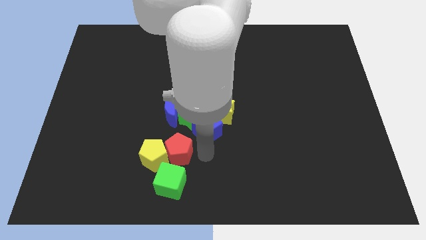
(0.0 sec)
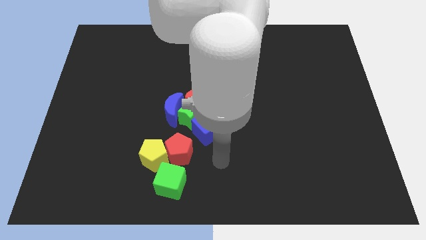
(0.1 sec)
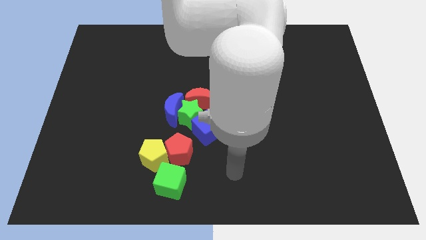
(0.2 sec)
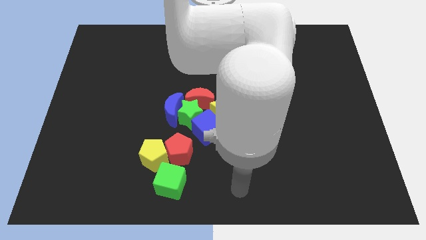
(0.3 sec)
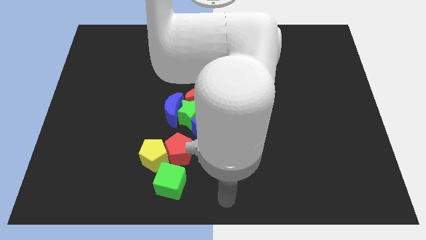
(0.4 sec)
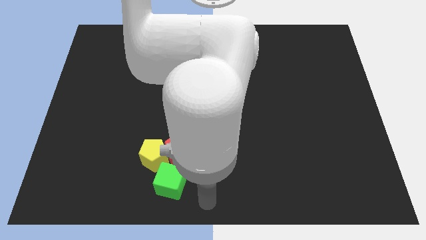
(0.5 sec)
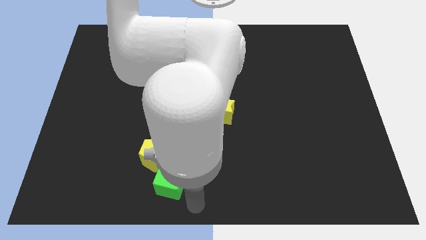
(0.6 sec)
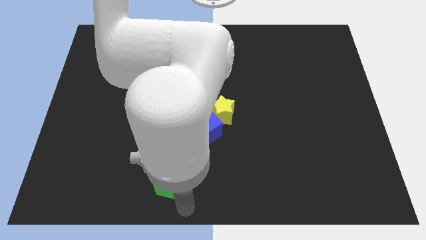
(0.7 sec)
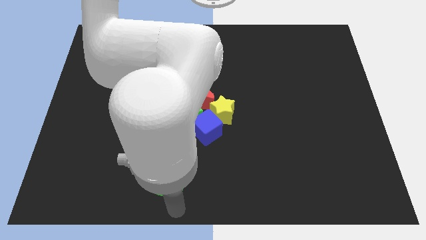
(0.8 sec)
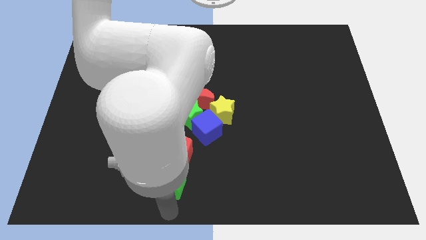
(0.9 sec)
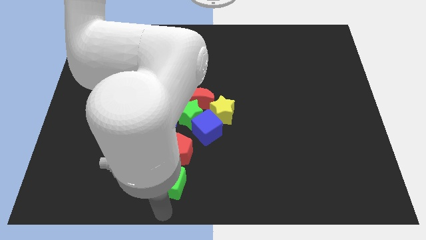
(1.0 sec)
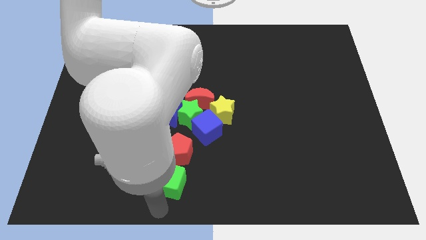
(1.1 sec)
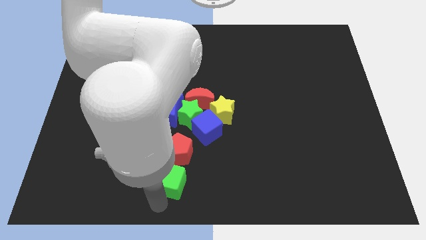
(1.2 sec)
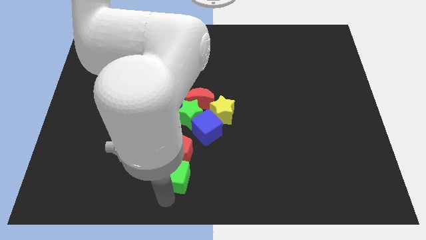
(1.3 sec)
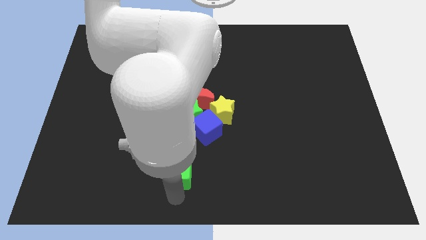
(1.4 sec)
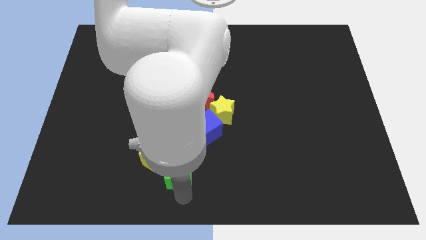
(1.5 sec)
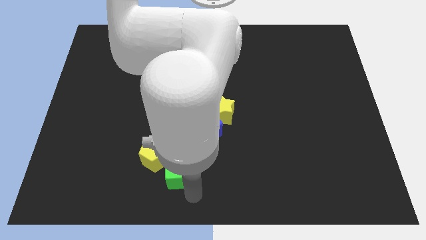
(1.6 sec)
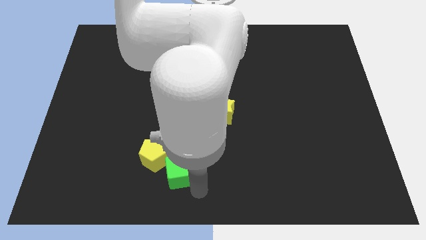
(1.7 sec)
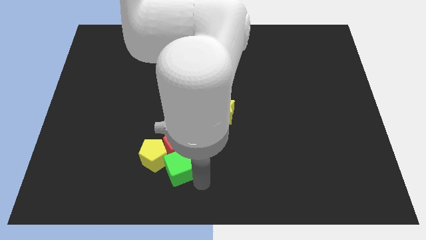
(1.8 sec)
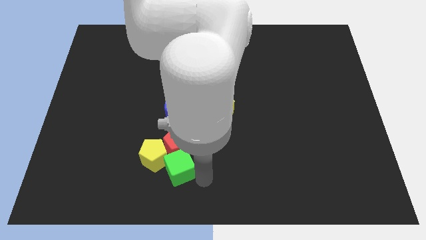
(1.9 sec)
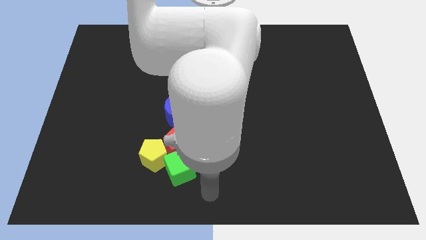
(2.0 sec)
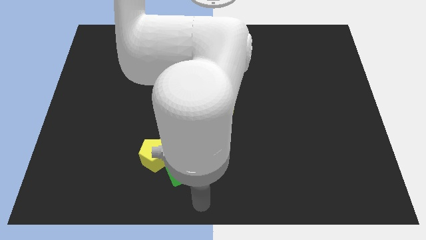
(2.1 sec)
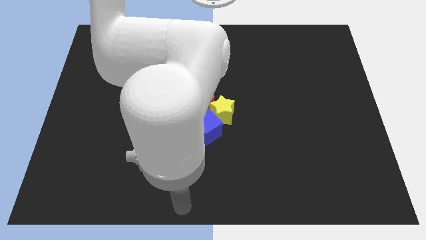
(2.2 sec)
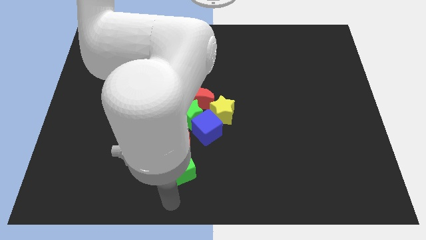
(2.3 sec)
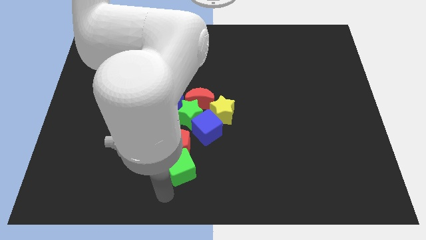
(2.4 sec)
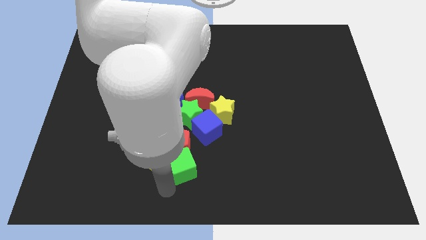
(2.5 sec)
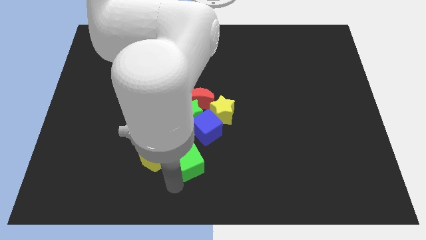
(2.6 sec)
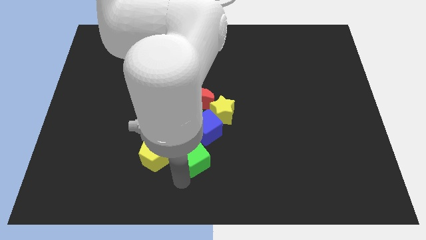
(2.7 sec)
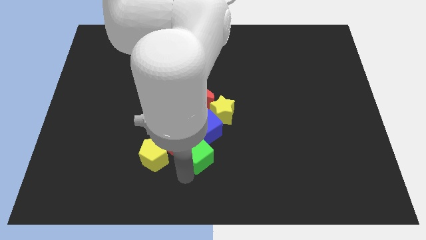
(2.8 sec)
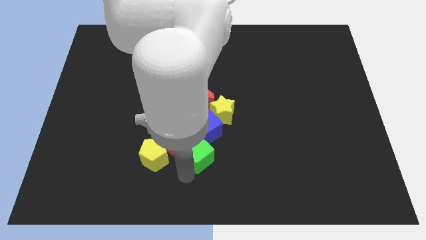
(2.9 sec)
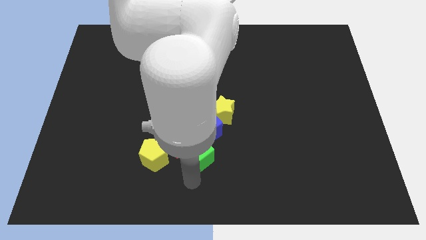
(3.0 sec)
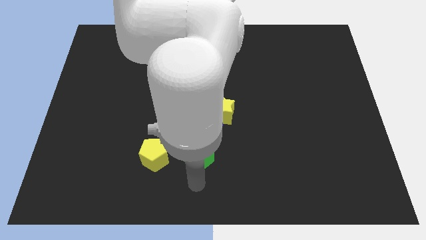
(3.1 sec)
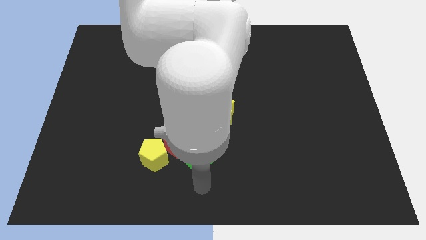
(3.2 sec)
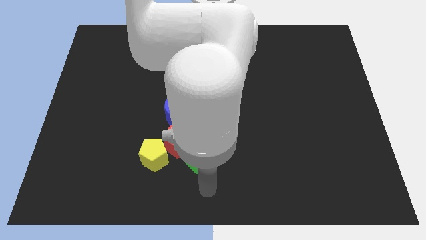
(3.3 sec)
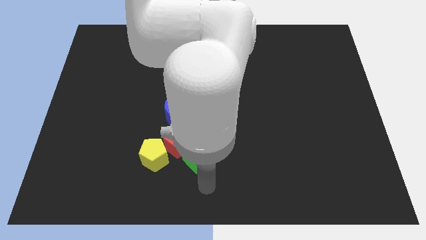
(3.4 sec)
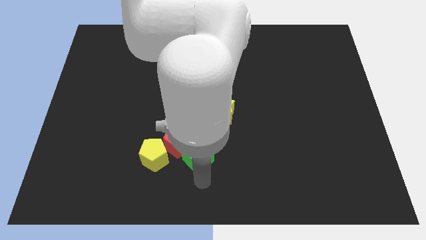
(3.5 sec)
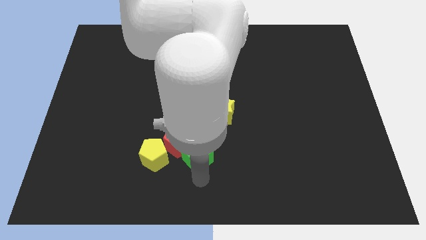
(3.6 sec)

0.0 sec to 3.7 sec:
place the green cube to the right of the yellow pentagon

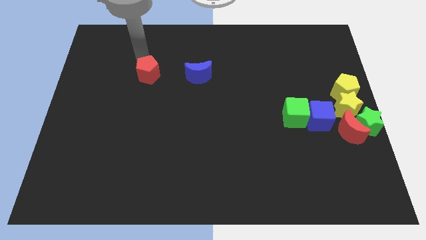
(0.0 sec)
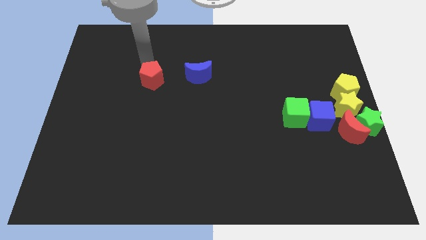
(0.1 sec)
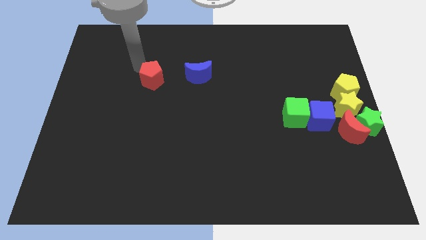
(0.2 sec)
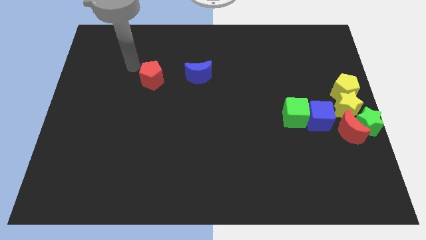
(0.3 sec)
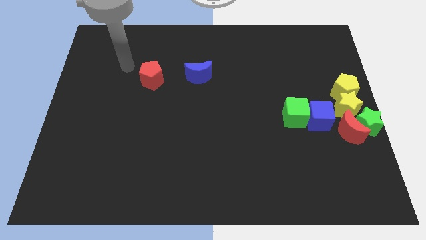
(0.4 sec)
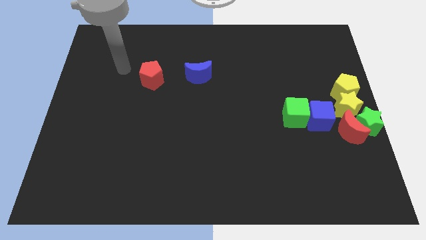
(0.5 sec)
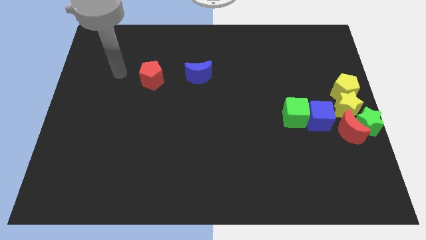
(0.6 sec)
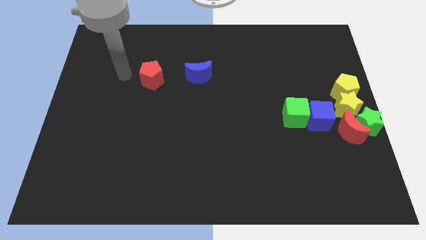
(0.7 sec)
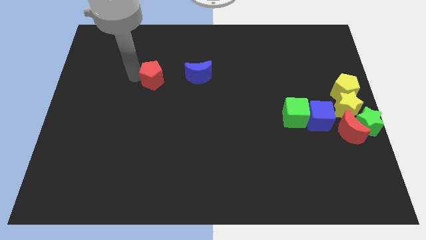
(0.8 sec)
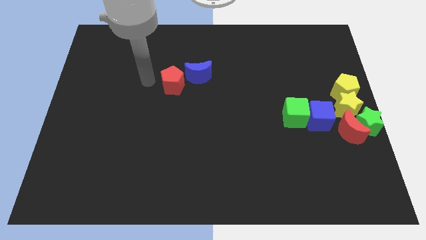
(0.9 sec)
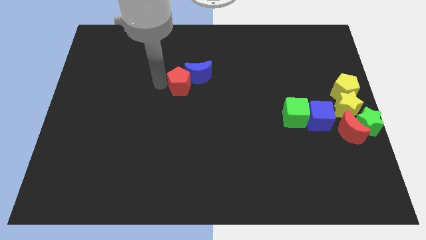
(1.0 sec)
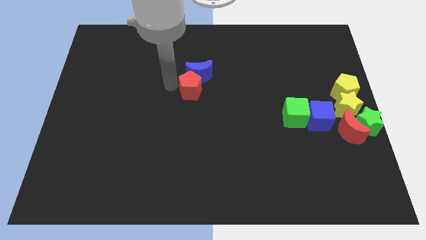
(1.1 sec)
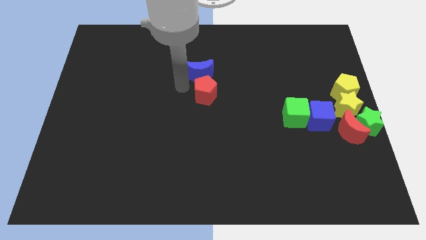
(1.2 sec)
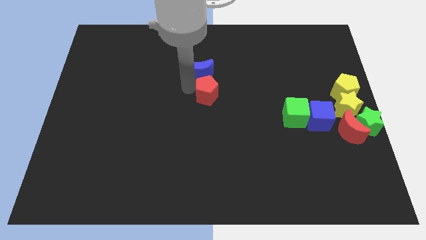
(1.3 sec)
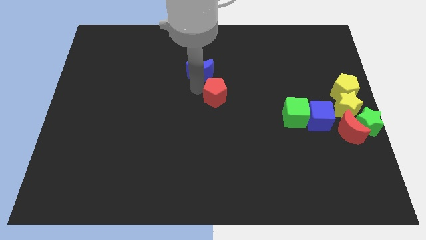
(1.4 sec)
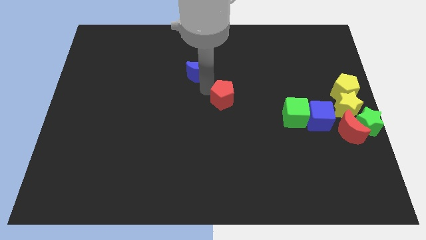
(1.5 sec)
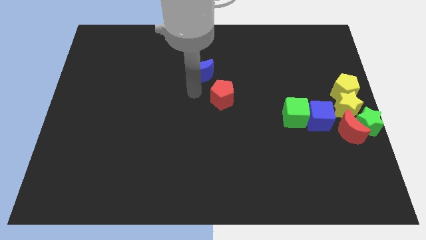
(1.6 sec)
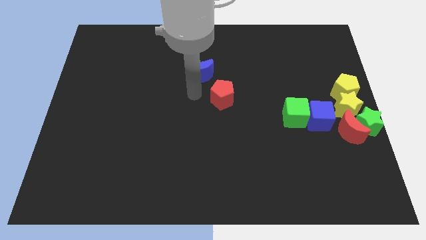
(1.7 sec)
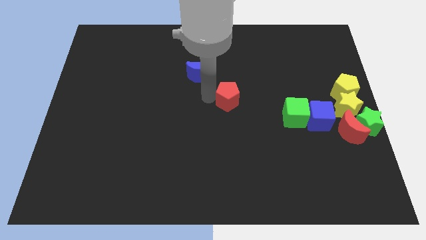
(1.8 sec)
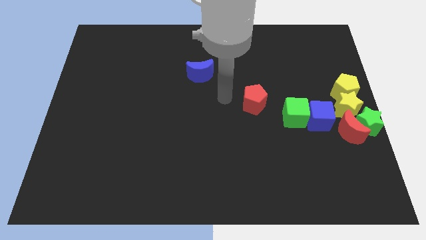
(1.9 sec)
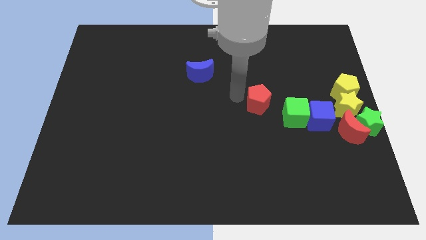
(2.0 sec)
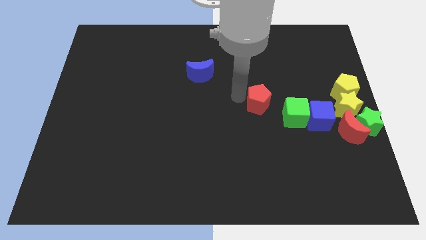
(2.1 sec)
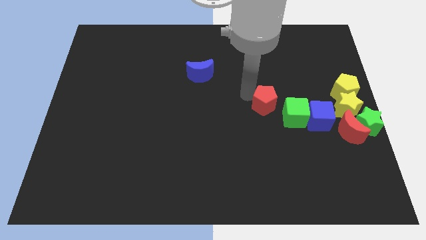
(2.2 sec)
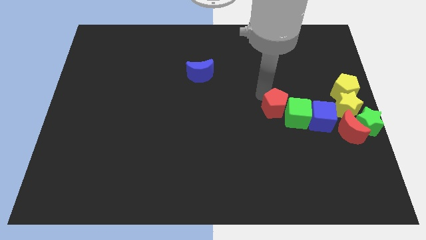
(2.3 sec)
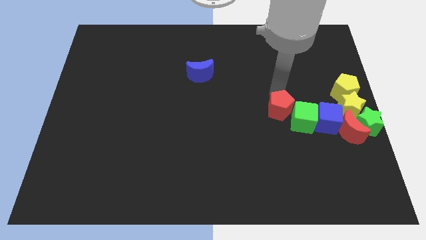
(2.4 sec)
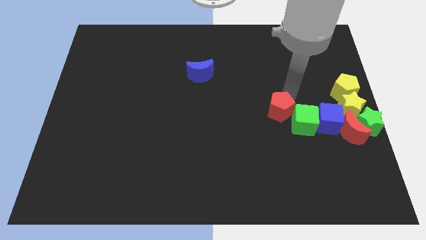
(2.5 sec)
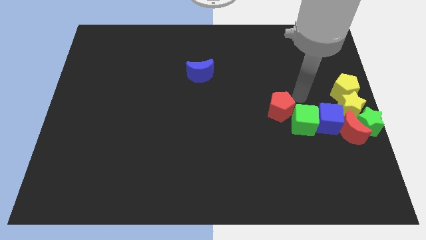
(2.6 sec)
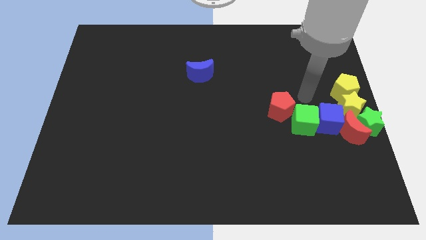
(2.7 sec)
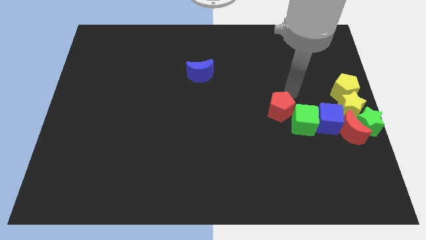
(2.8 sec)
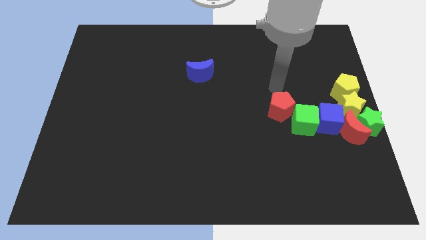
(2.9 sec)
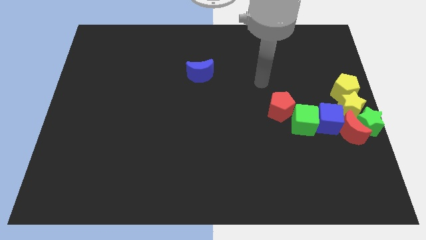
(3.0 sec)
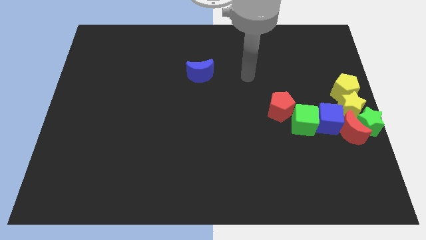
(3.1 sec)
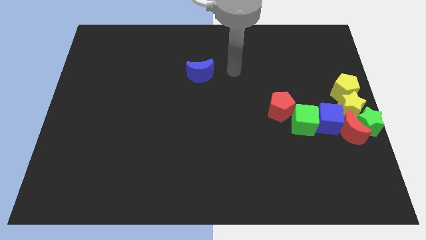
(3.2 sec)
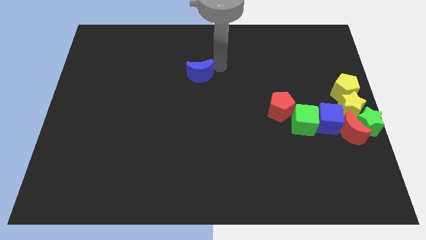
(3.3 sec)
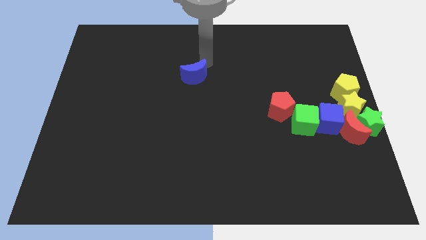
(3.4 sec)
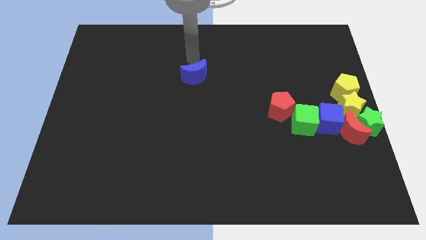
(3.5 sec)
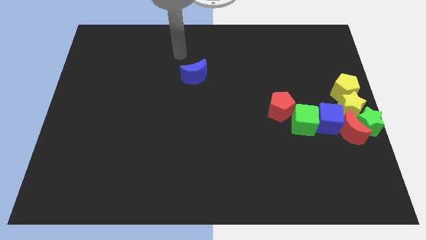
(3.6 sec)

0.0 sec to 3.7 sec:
move red pentagon to the green cube

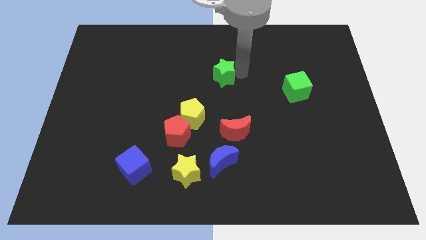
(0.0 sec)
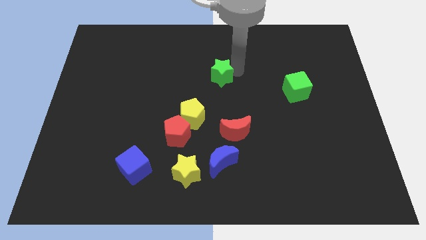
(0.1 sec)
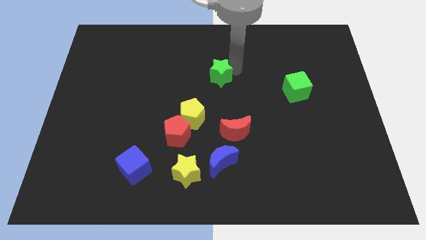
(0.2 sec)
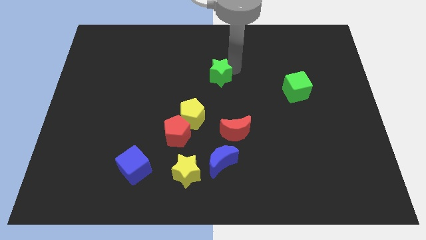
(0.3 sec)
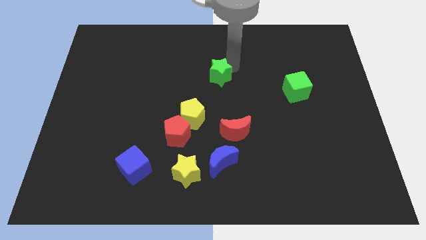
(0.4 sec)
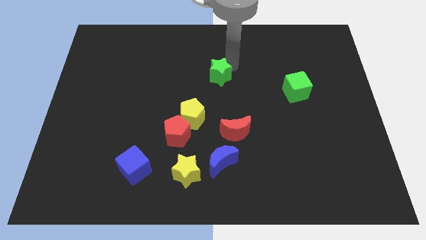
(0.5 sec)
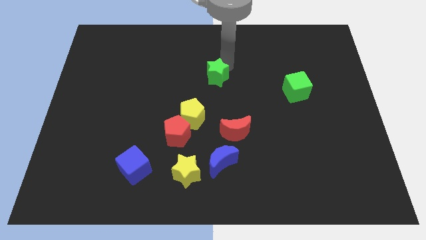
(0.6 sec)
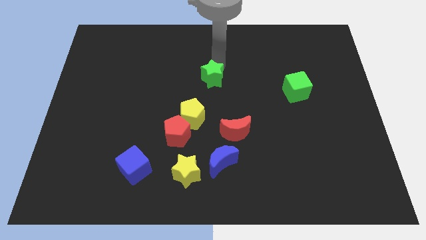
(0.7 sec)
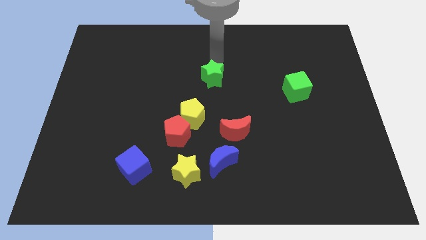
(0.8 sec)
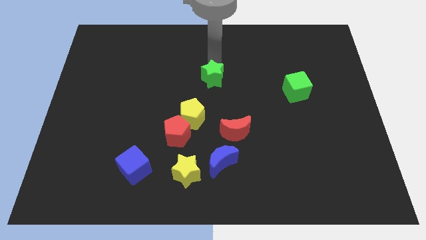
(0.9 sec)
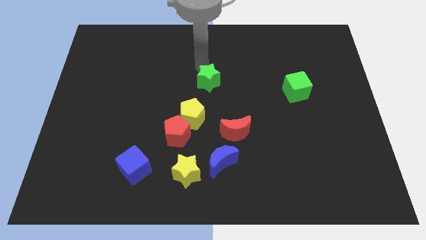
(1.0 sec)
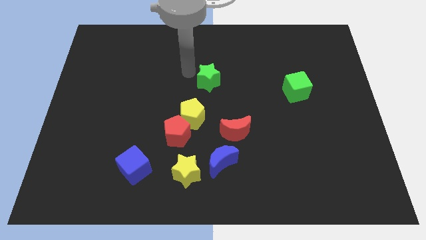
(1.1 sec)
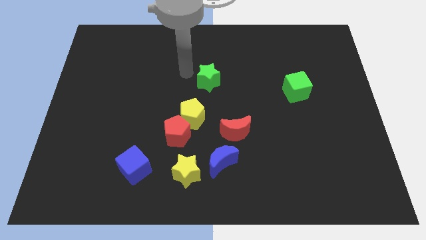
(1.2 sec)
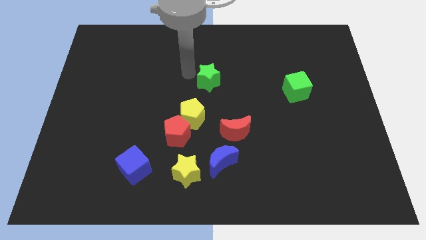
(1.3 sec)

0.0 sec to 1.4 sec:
push the green star to the top center of the board

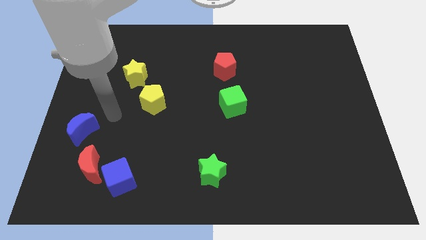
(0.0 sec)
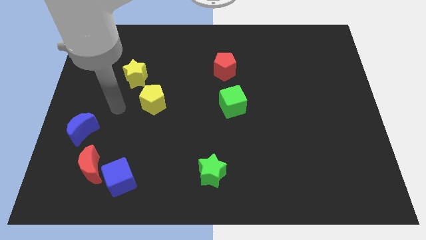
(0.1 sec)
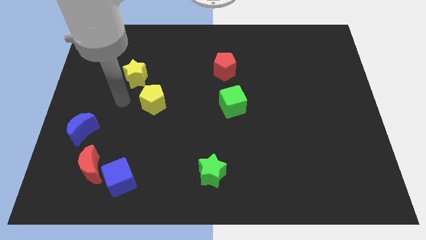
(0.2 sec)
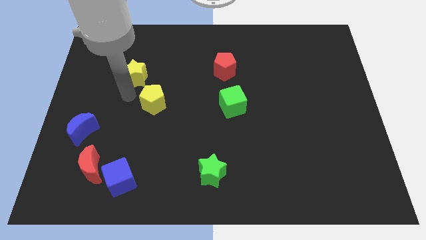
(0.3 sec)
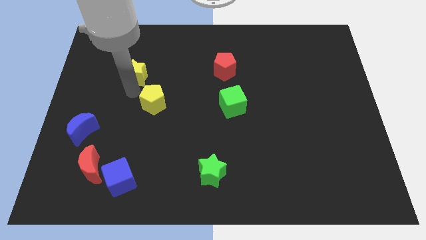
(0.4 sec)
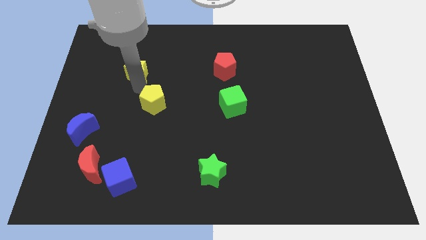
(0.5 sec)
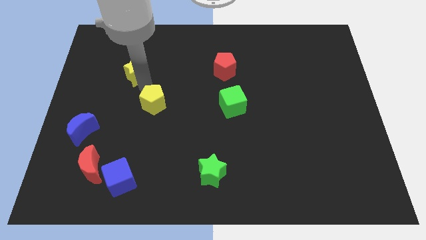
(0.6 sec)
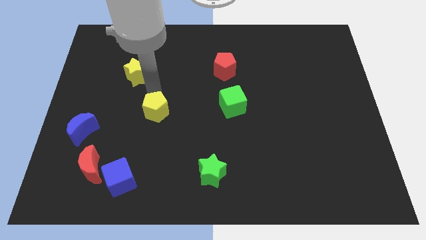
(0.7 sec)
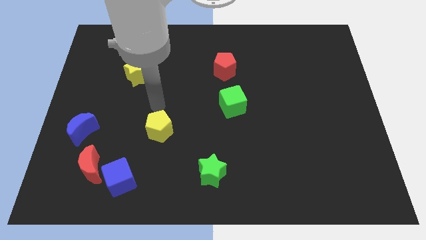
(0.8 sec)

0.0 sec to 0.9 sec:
move the yellow pentagon slightly to the bottom
